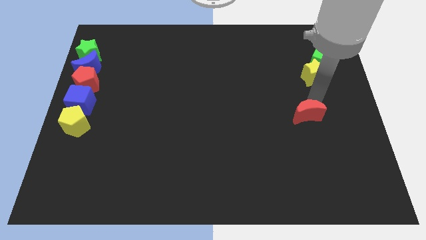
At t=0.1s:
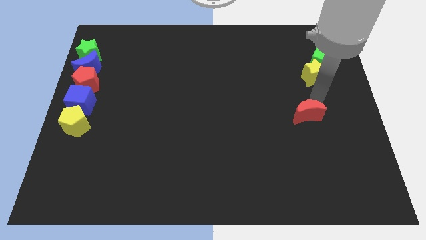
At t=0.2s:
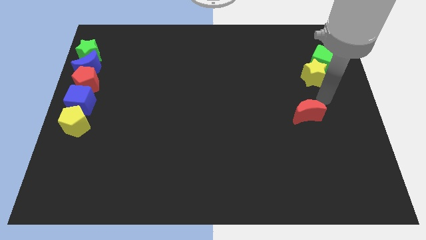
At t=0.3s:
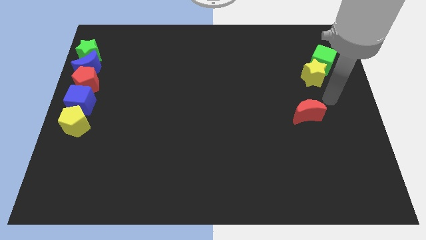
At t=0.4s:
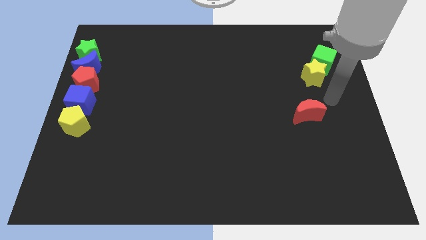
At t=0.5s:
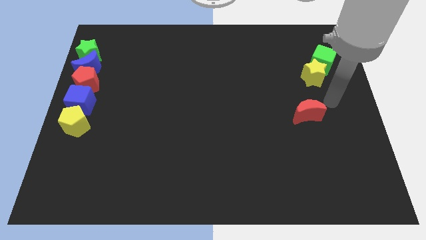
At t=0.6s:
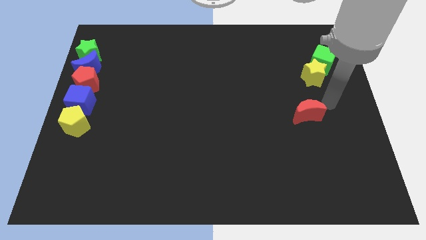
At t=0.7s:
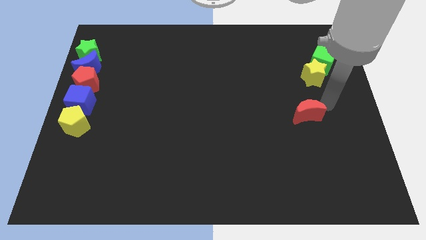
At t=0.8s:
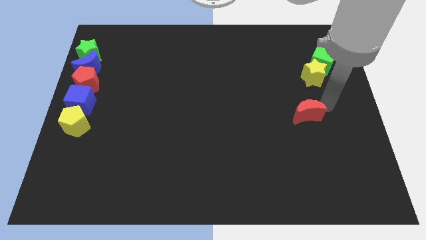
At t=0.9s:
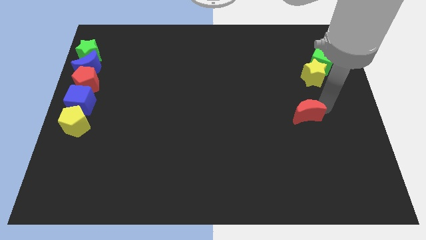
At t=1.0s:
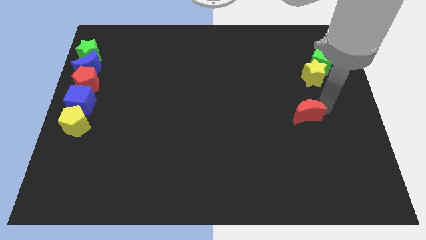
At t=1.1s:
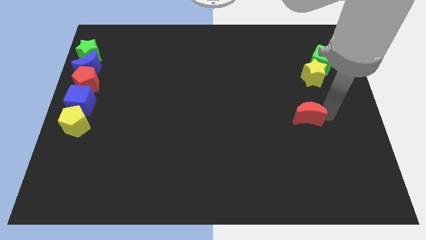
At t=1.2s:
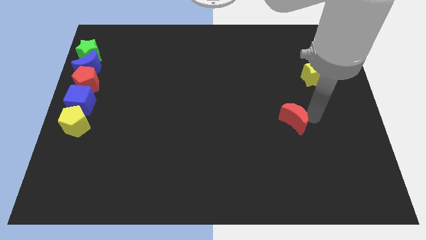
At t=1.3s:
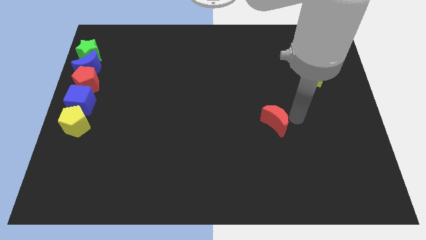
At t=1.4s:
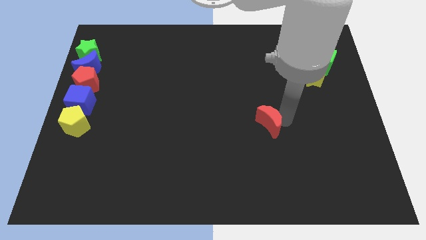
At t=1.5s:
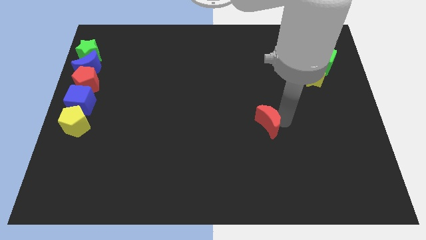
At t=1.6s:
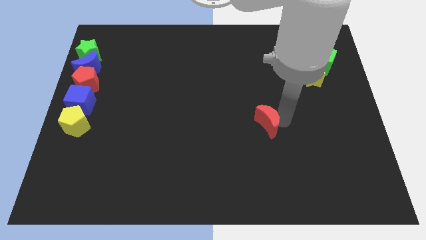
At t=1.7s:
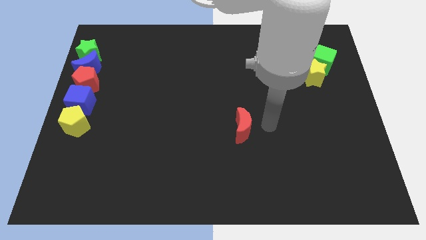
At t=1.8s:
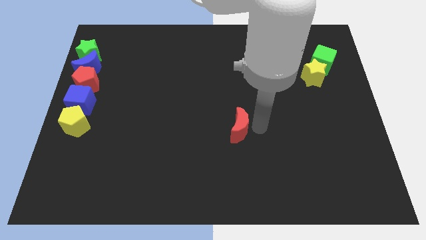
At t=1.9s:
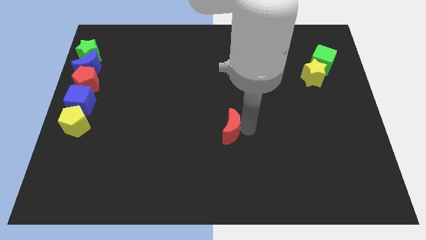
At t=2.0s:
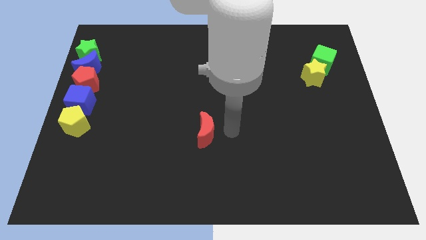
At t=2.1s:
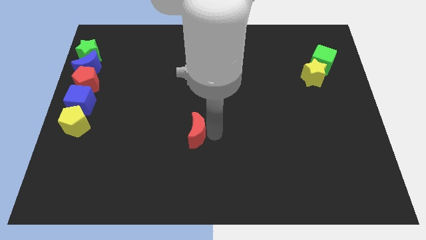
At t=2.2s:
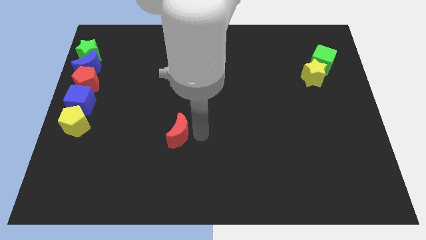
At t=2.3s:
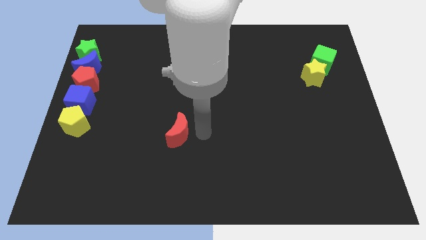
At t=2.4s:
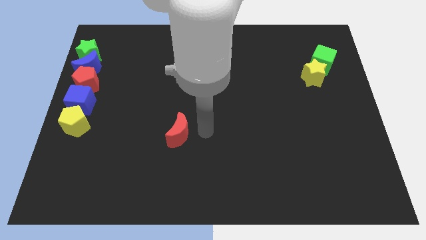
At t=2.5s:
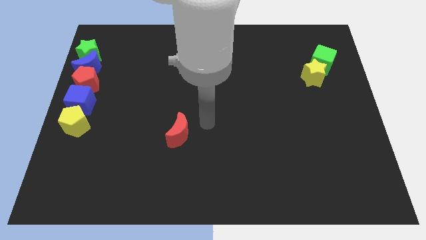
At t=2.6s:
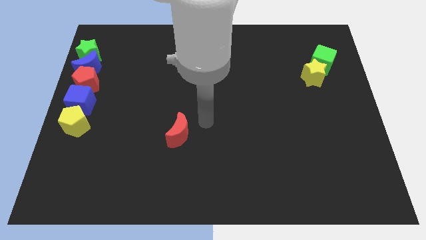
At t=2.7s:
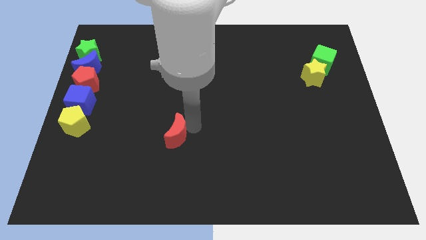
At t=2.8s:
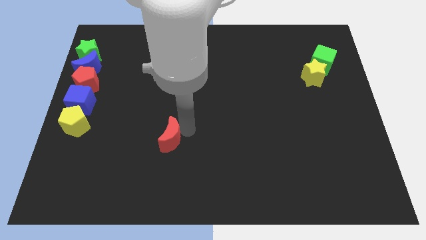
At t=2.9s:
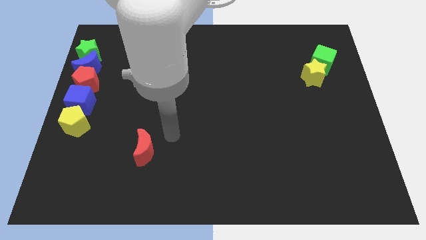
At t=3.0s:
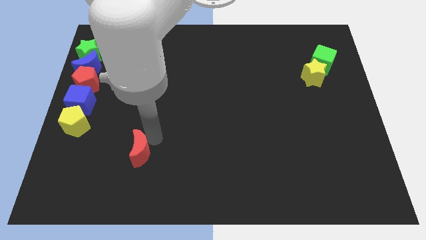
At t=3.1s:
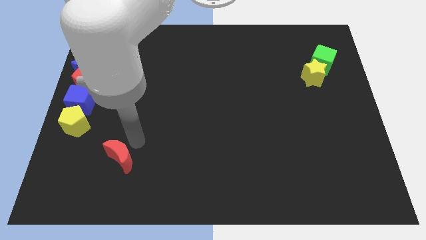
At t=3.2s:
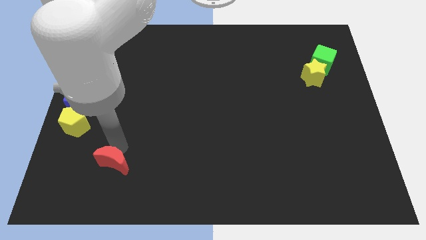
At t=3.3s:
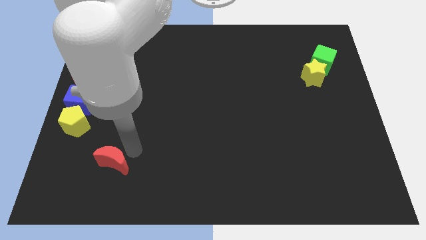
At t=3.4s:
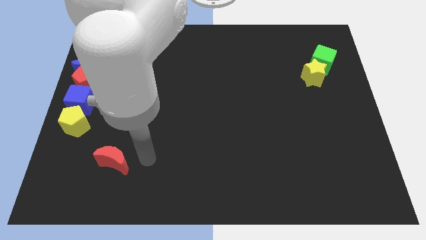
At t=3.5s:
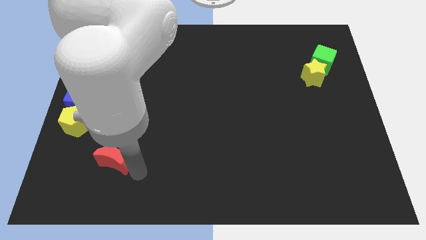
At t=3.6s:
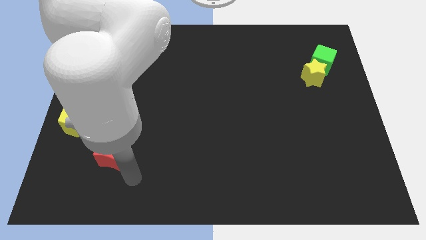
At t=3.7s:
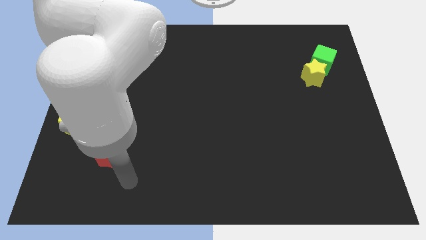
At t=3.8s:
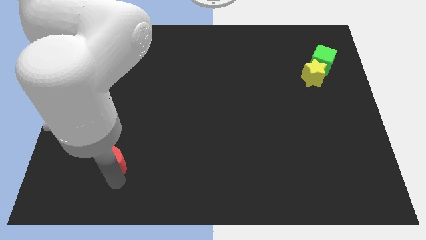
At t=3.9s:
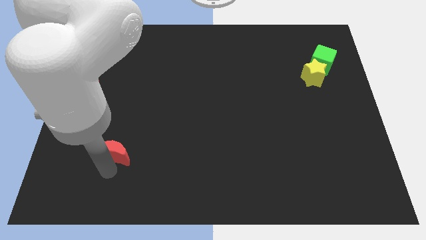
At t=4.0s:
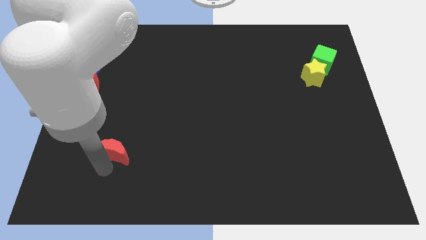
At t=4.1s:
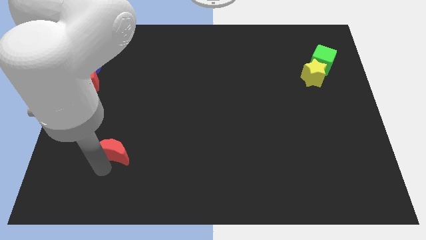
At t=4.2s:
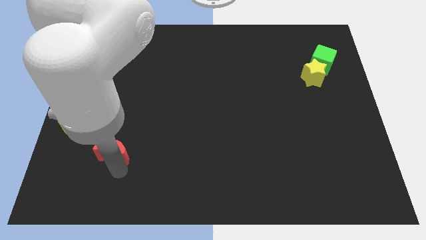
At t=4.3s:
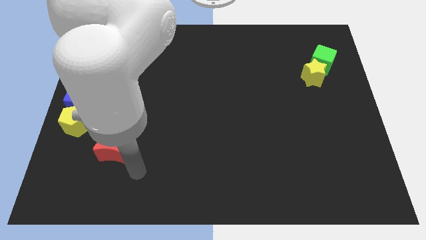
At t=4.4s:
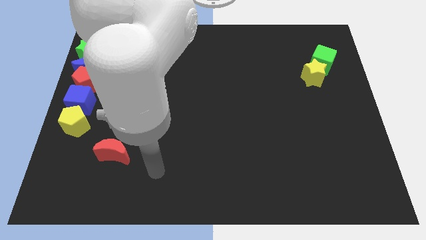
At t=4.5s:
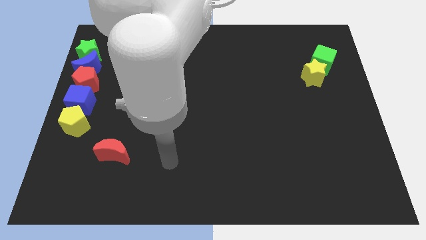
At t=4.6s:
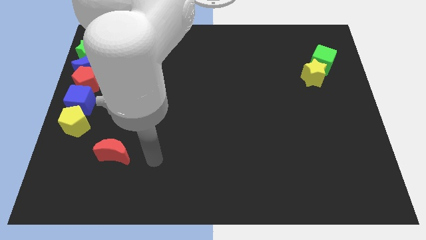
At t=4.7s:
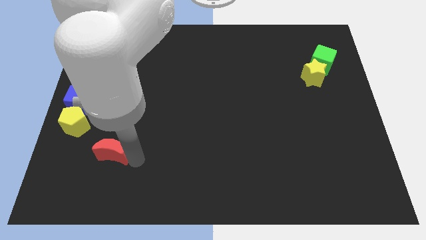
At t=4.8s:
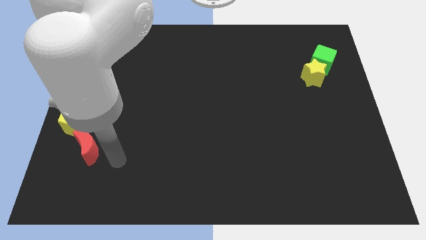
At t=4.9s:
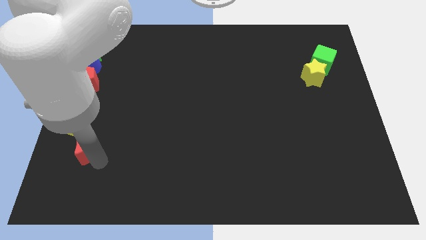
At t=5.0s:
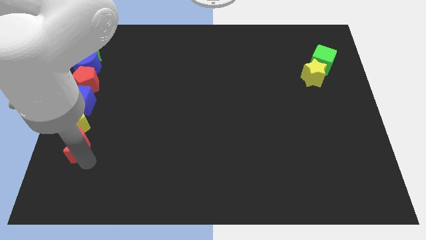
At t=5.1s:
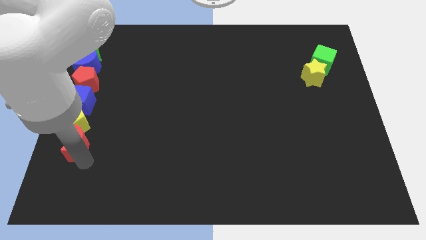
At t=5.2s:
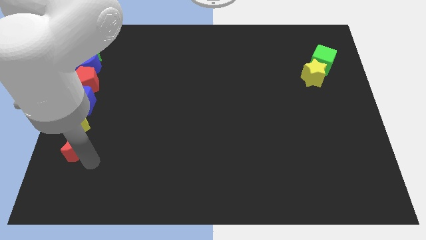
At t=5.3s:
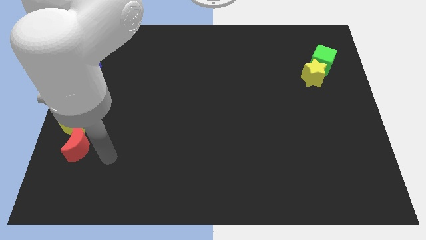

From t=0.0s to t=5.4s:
push the red crescent to the bottom of the yellow pentagon

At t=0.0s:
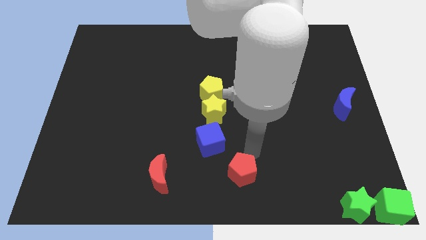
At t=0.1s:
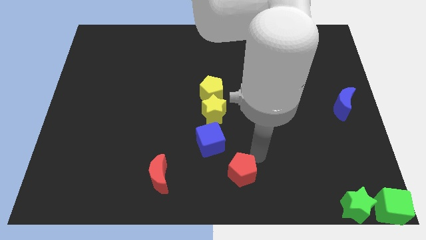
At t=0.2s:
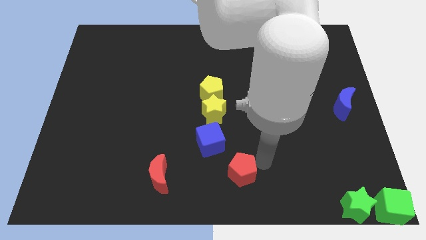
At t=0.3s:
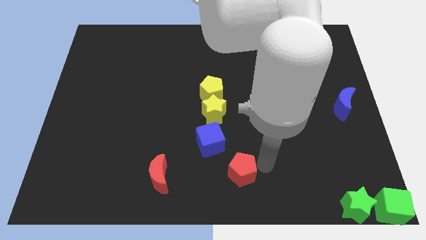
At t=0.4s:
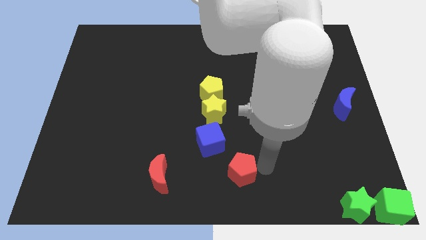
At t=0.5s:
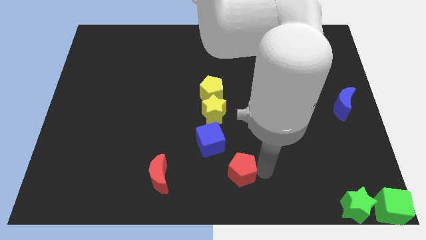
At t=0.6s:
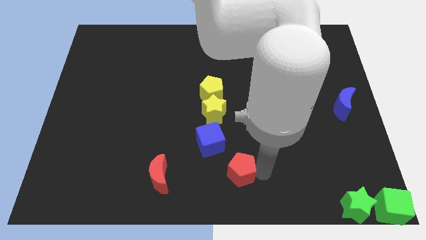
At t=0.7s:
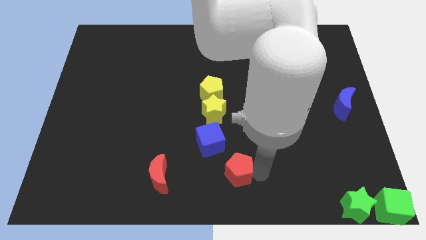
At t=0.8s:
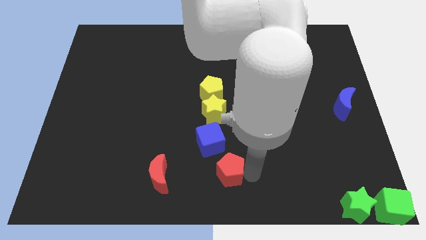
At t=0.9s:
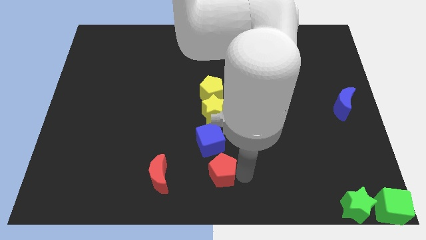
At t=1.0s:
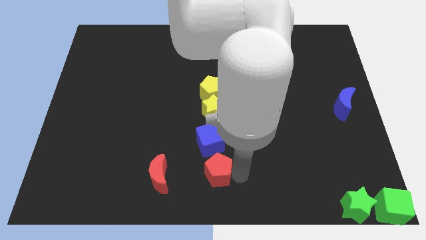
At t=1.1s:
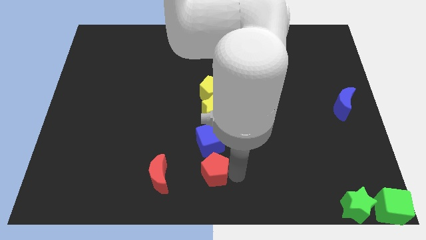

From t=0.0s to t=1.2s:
place the red pentagon below the blue cube

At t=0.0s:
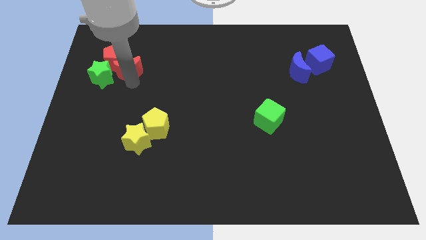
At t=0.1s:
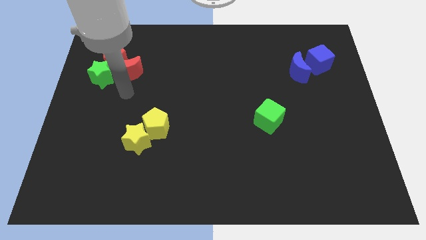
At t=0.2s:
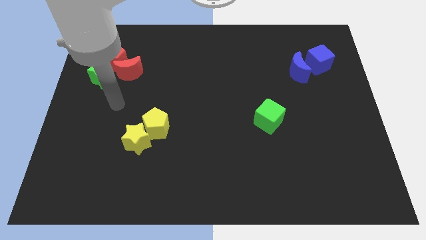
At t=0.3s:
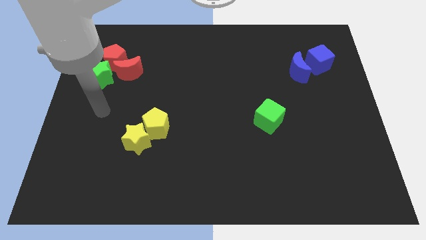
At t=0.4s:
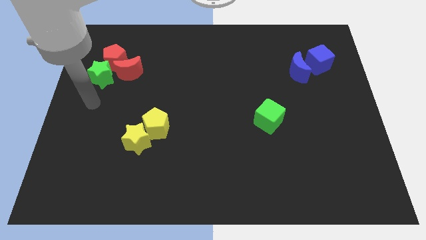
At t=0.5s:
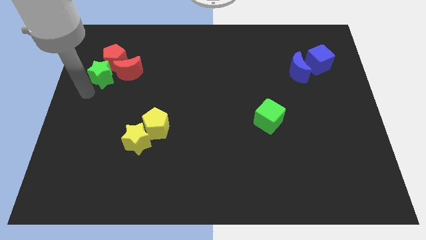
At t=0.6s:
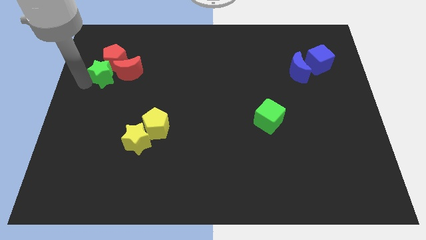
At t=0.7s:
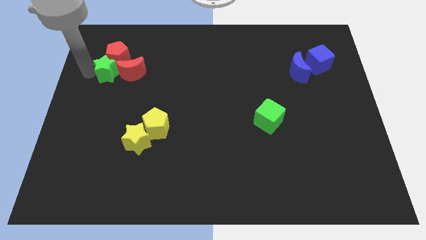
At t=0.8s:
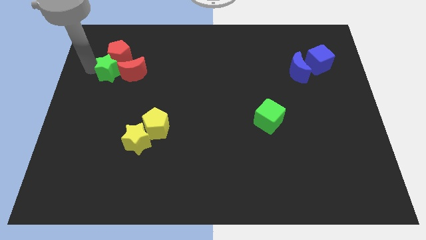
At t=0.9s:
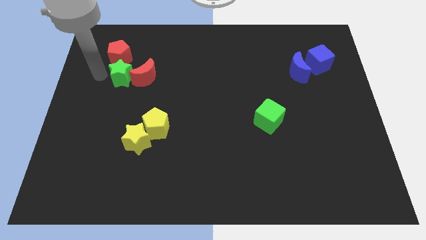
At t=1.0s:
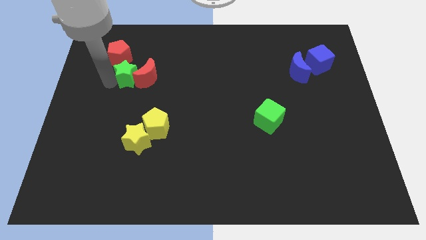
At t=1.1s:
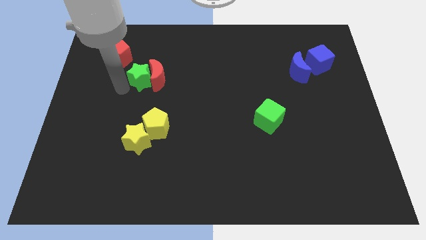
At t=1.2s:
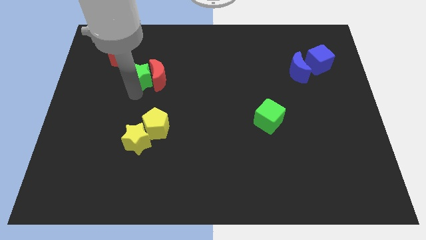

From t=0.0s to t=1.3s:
move the green star and red crescent away from the red pentagon

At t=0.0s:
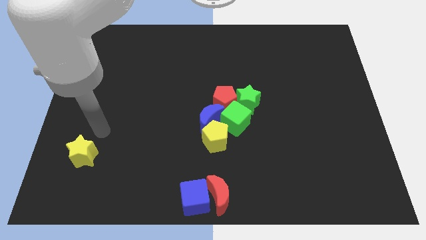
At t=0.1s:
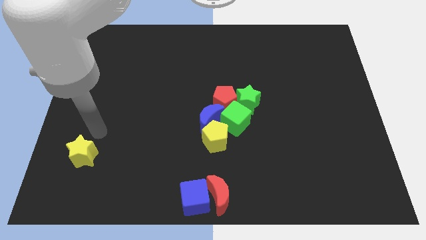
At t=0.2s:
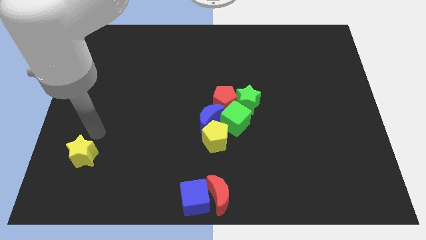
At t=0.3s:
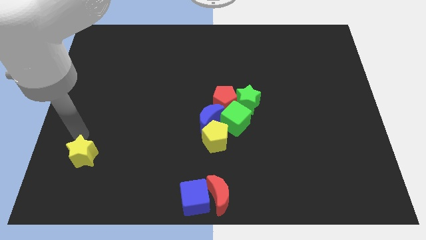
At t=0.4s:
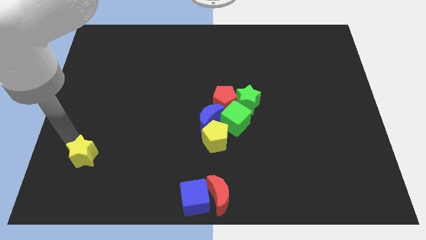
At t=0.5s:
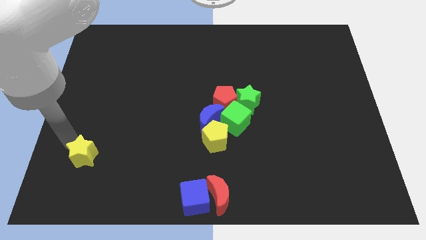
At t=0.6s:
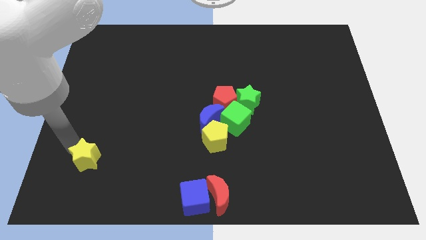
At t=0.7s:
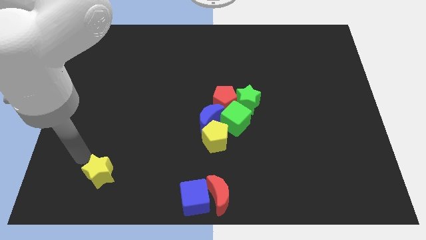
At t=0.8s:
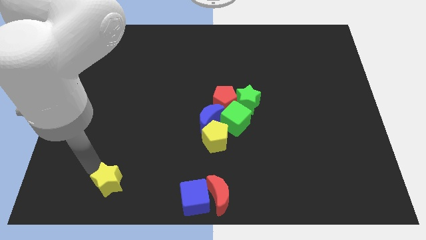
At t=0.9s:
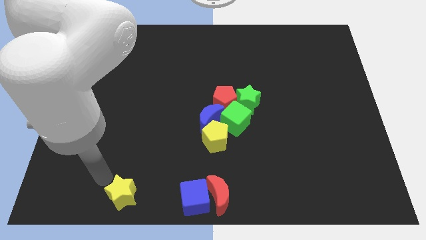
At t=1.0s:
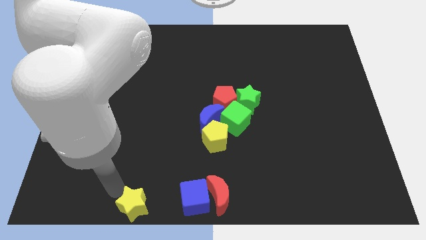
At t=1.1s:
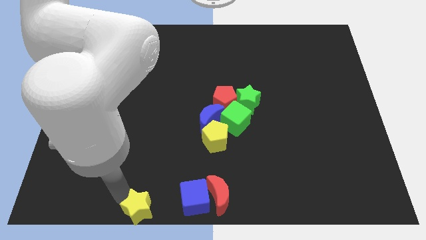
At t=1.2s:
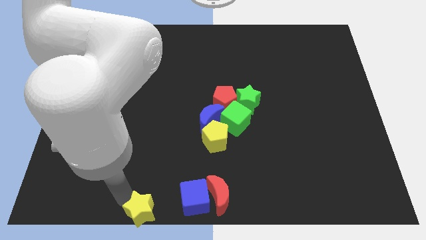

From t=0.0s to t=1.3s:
push the yellow star towards the bottom side
